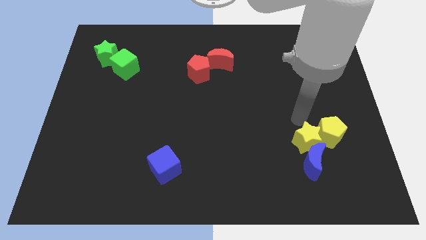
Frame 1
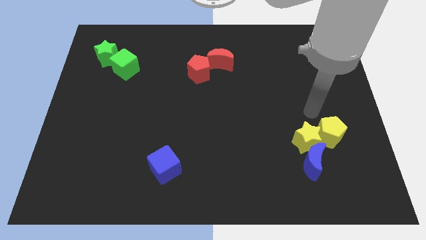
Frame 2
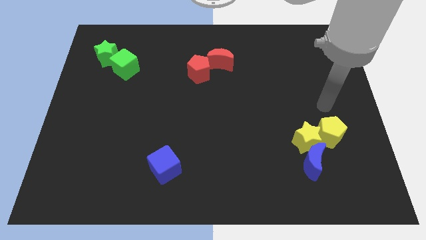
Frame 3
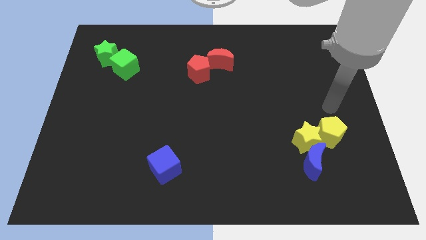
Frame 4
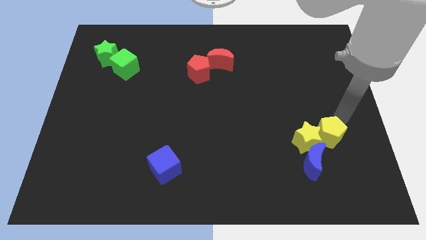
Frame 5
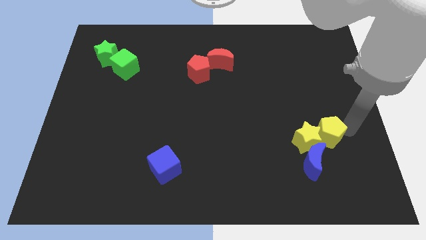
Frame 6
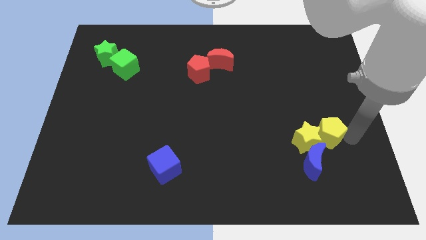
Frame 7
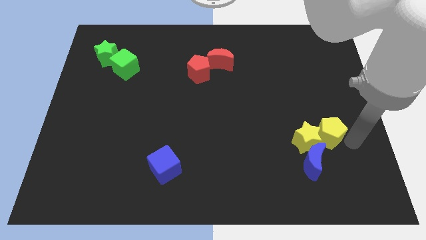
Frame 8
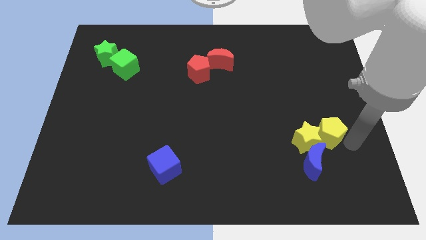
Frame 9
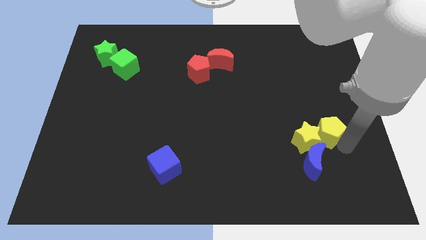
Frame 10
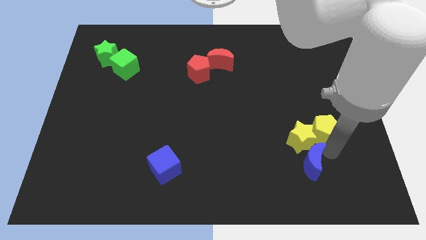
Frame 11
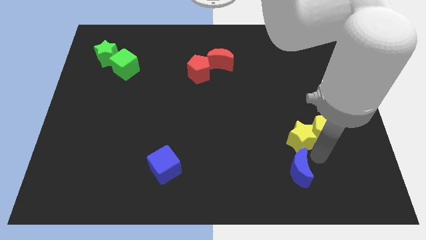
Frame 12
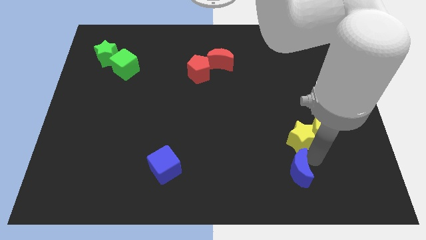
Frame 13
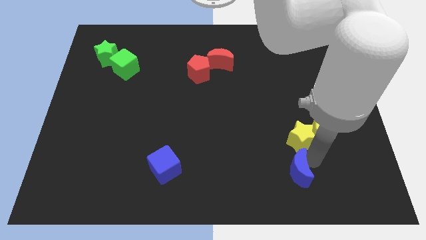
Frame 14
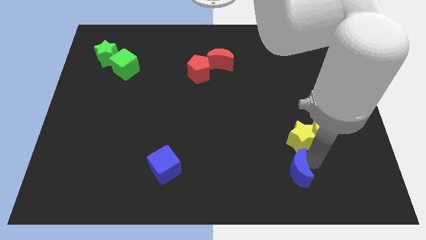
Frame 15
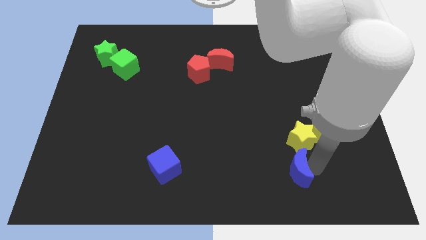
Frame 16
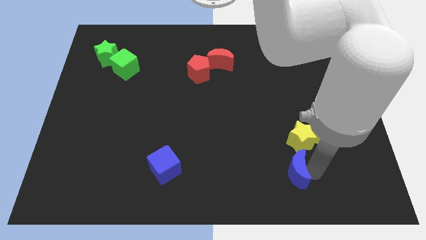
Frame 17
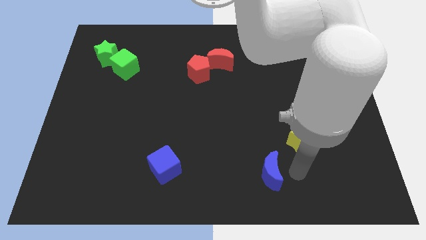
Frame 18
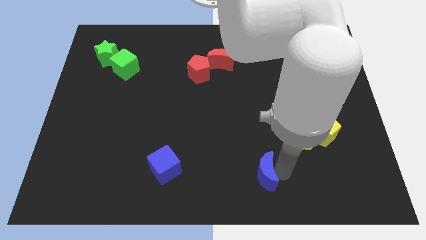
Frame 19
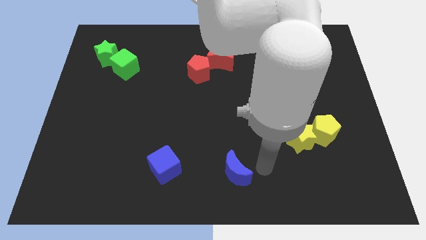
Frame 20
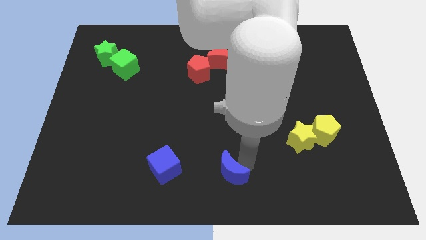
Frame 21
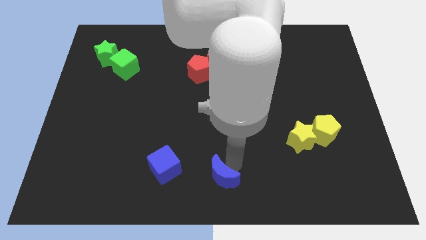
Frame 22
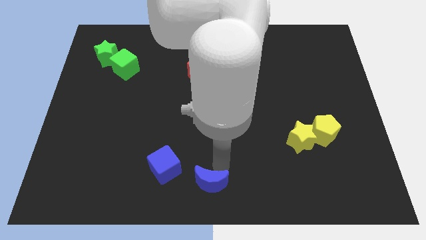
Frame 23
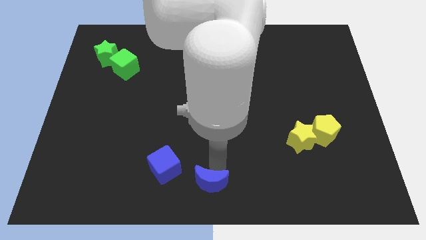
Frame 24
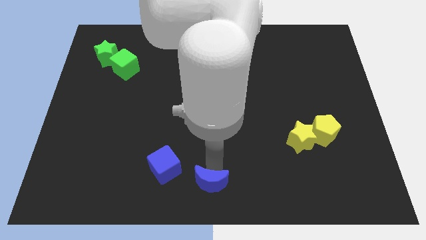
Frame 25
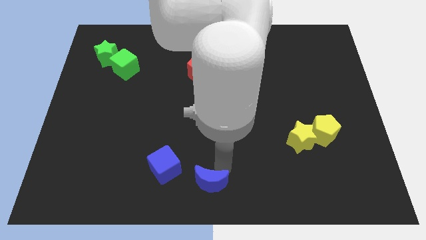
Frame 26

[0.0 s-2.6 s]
push blue moon near blue cube

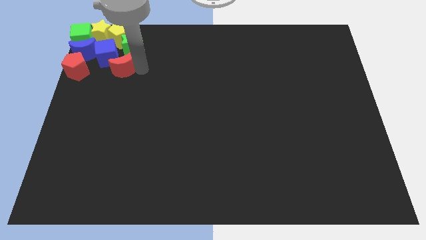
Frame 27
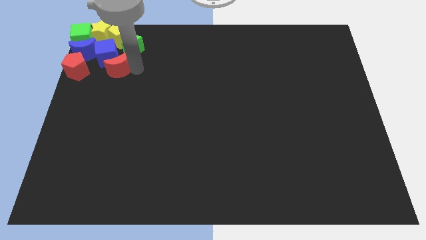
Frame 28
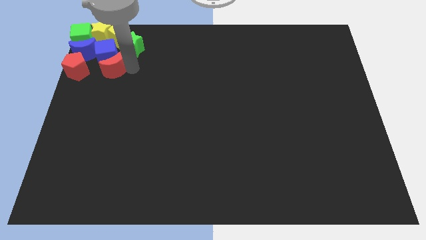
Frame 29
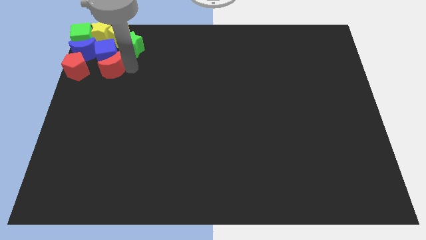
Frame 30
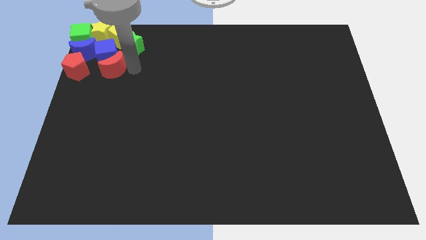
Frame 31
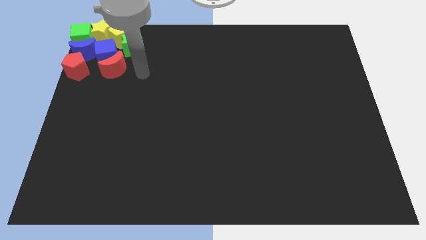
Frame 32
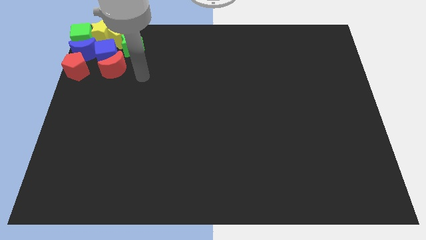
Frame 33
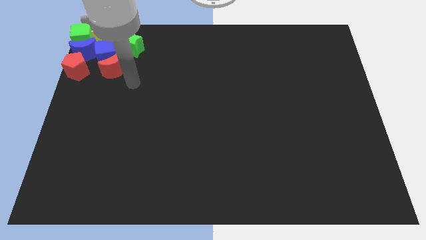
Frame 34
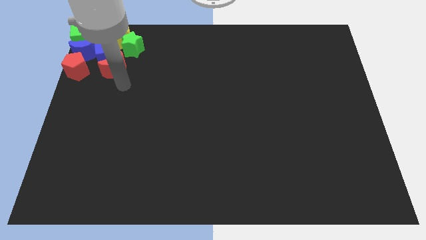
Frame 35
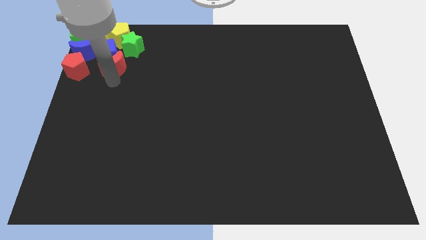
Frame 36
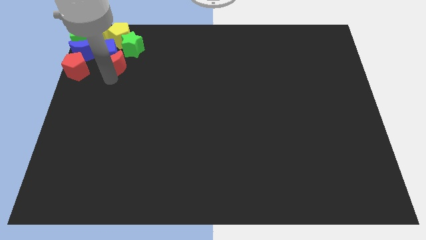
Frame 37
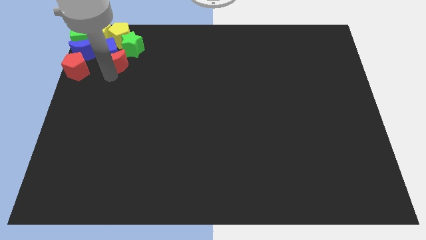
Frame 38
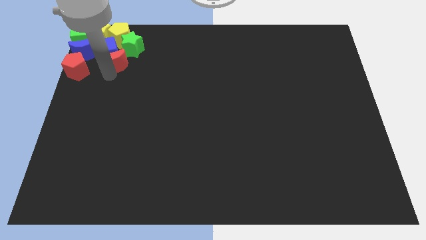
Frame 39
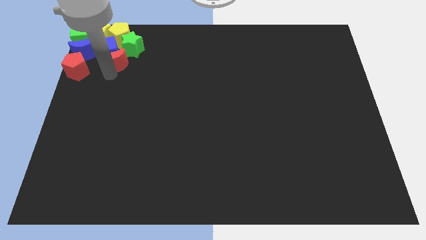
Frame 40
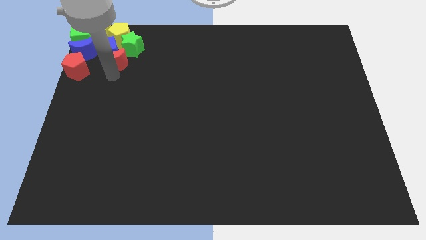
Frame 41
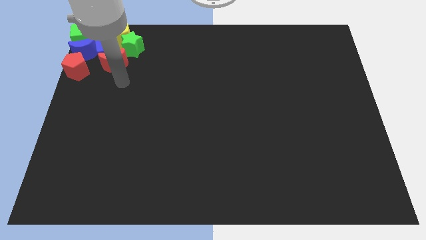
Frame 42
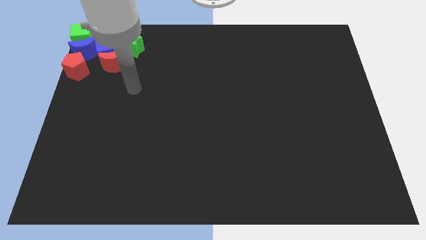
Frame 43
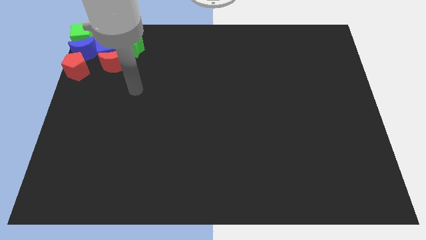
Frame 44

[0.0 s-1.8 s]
push the red crescent under the blue cube

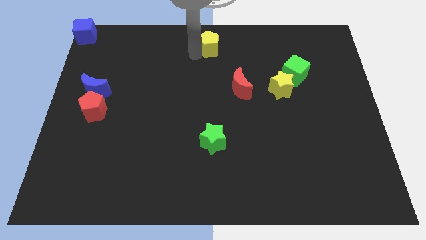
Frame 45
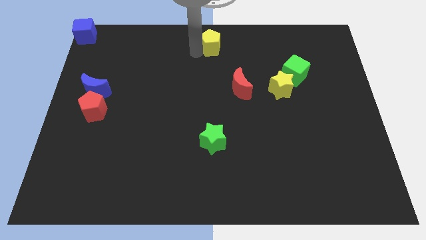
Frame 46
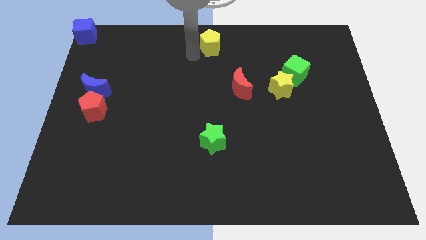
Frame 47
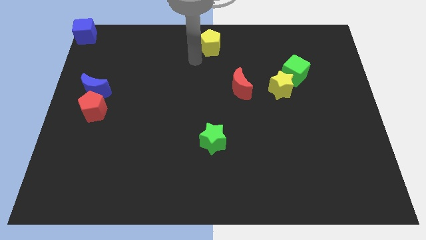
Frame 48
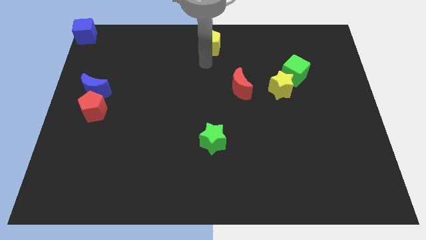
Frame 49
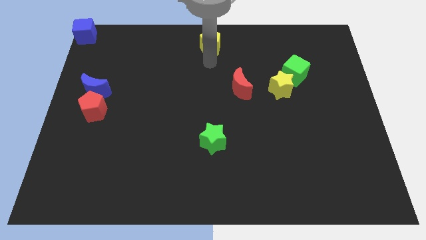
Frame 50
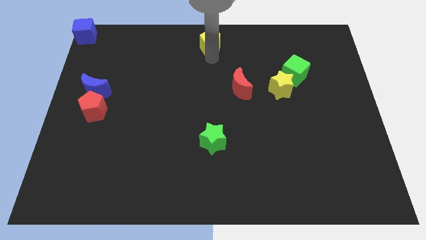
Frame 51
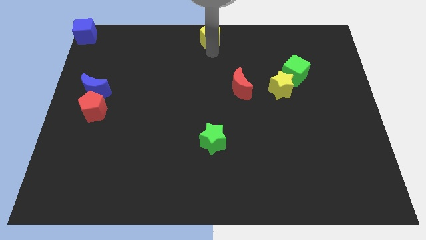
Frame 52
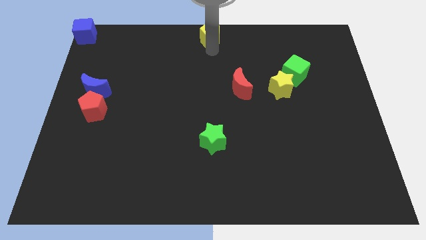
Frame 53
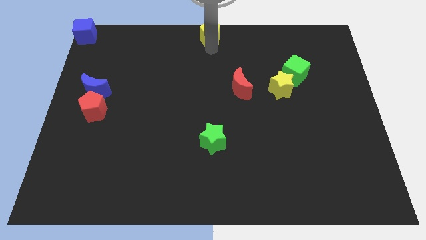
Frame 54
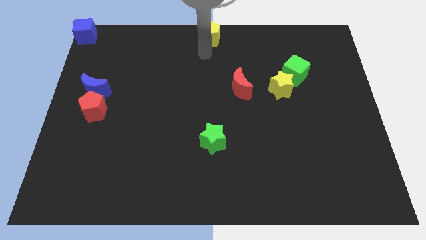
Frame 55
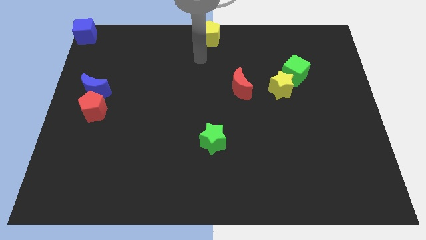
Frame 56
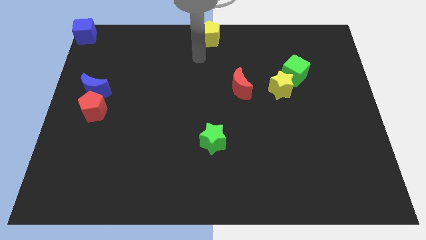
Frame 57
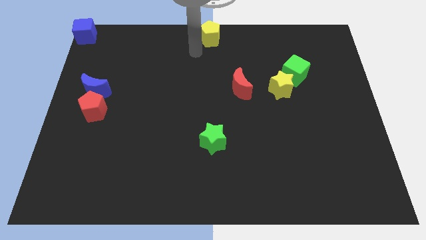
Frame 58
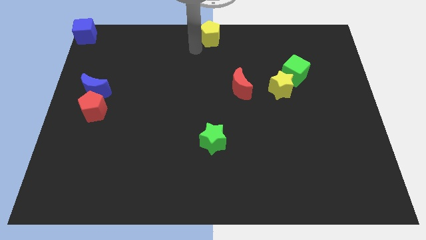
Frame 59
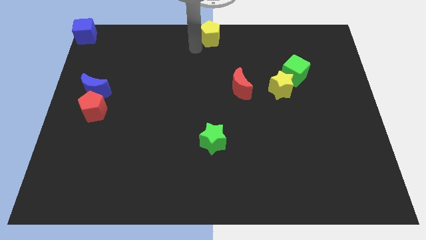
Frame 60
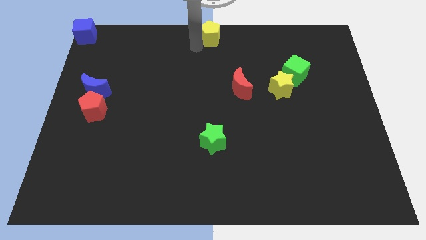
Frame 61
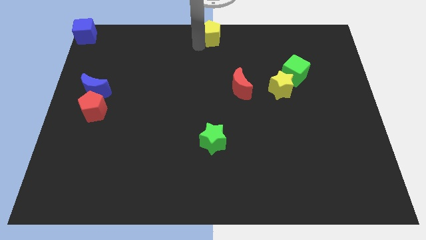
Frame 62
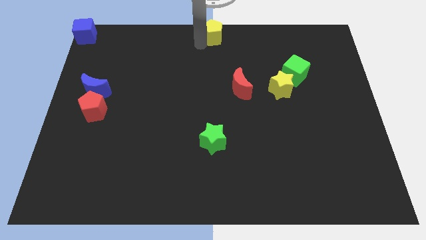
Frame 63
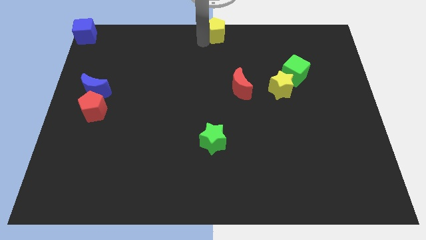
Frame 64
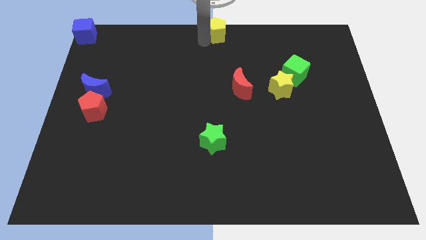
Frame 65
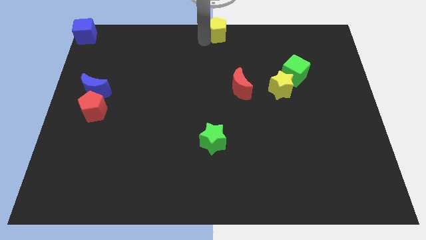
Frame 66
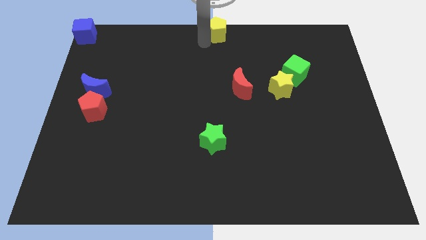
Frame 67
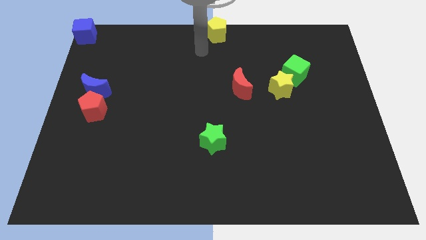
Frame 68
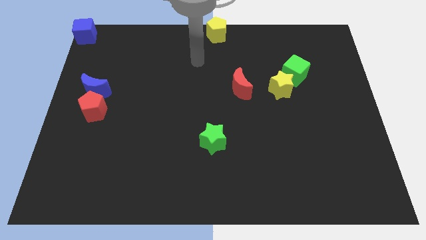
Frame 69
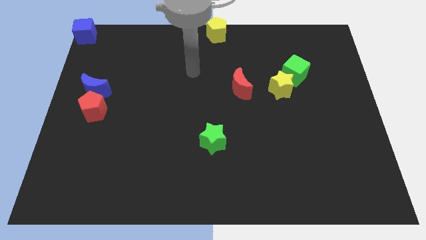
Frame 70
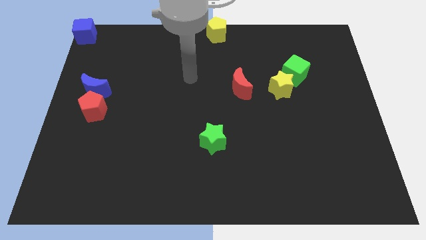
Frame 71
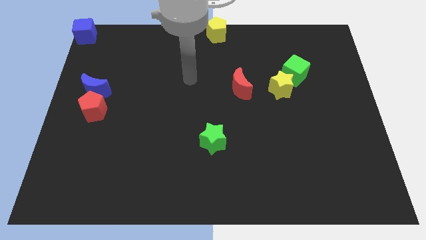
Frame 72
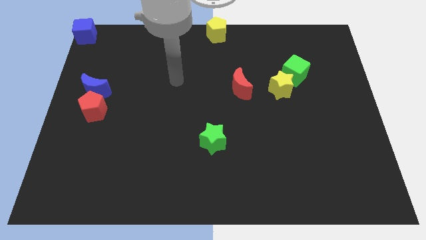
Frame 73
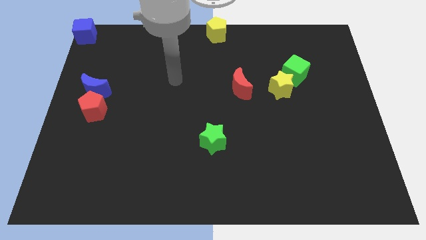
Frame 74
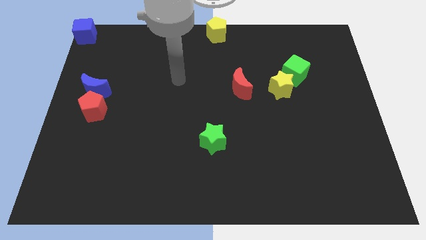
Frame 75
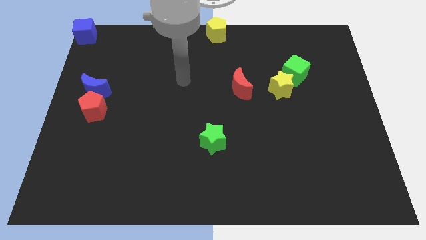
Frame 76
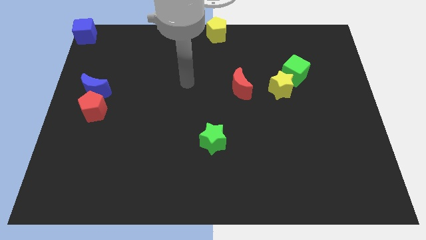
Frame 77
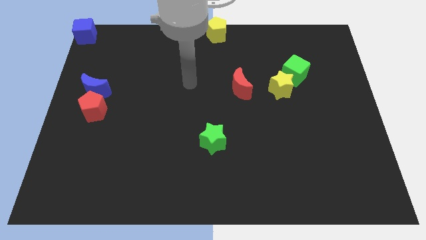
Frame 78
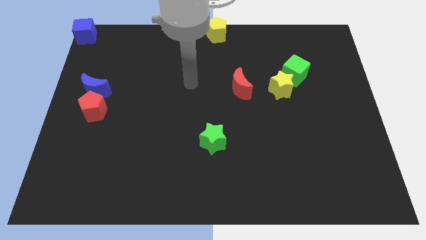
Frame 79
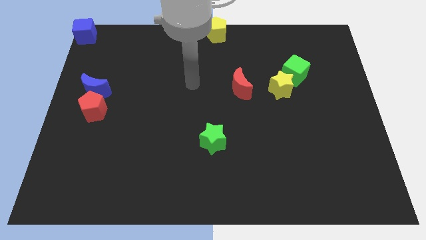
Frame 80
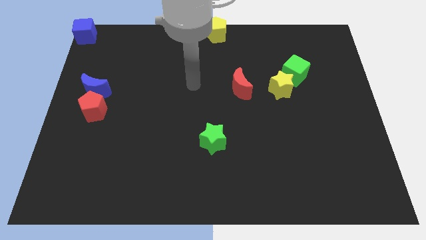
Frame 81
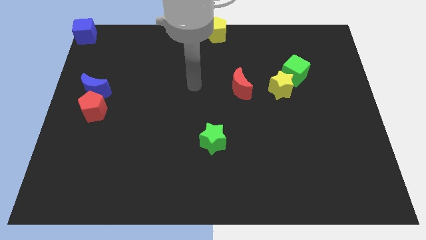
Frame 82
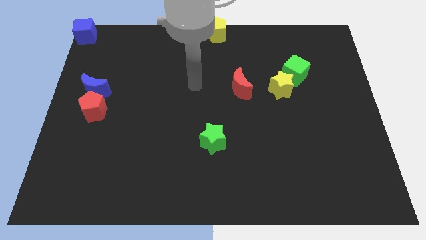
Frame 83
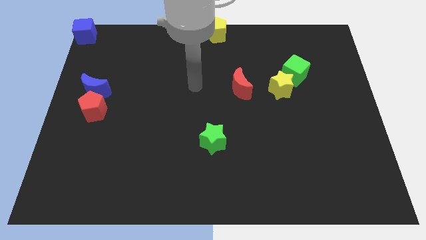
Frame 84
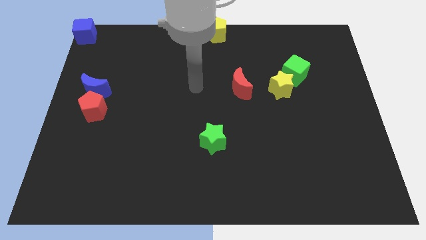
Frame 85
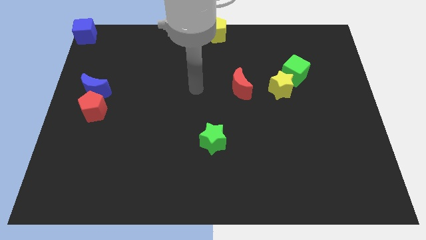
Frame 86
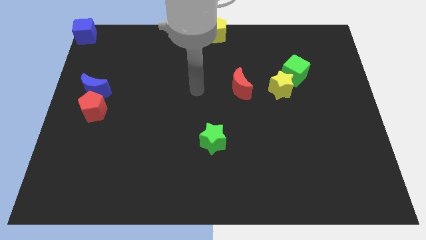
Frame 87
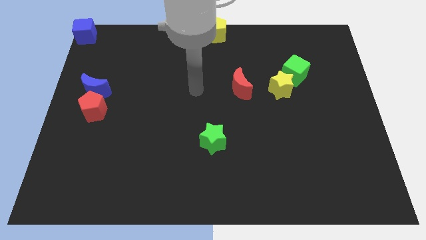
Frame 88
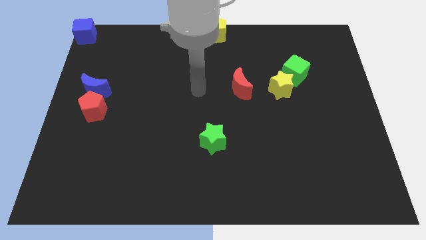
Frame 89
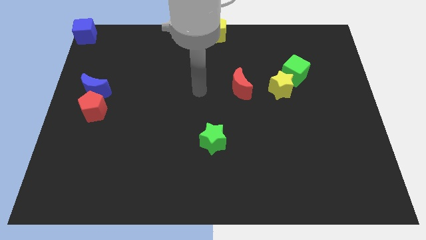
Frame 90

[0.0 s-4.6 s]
put the yellow pentagon at the top center
